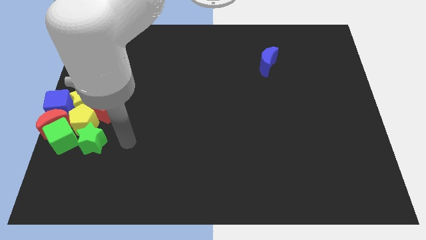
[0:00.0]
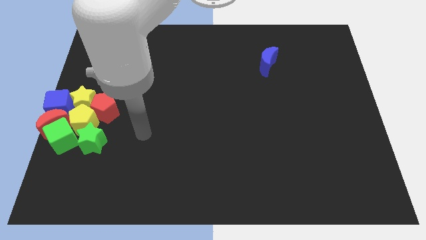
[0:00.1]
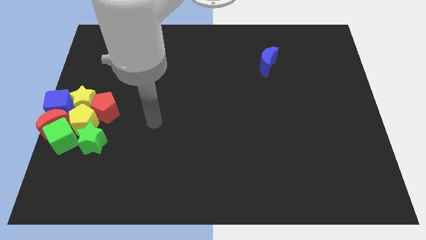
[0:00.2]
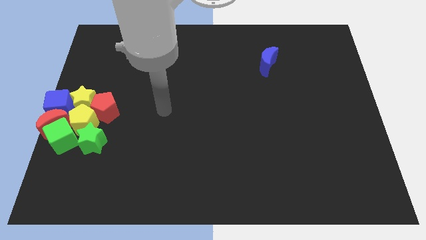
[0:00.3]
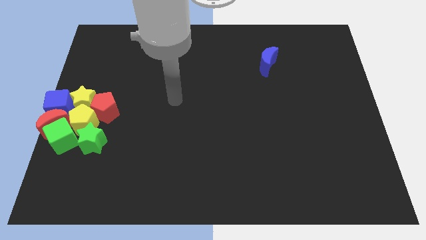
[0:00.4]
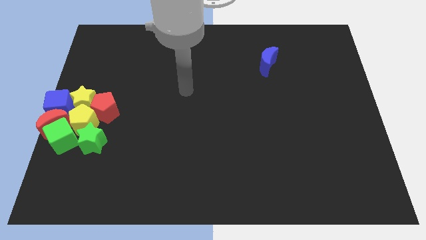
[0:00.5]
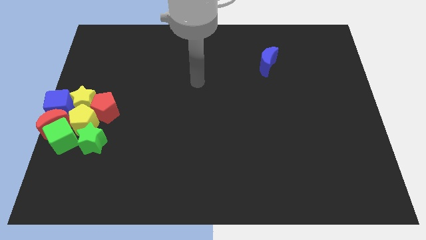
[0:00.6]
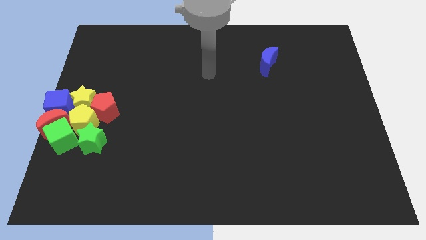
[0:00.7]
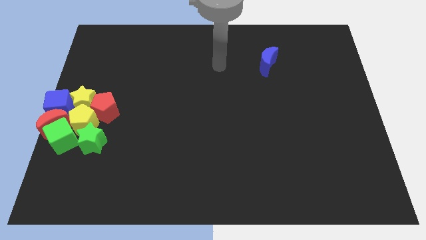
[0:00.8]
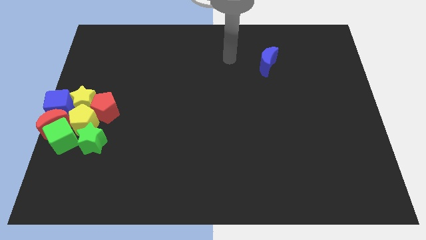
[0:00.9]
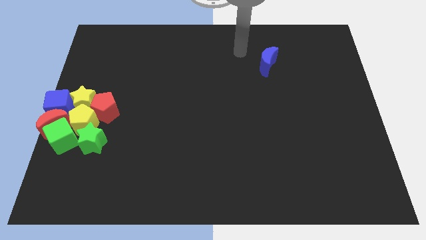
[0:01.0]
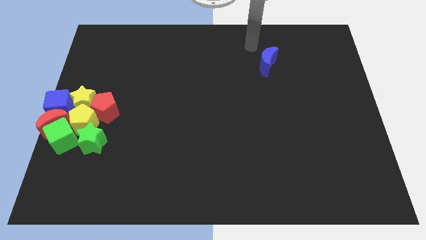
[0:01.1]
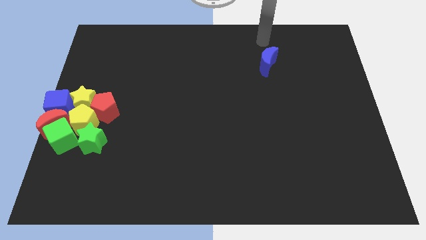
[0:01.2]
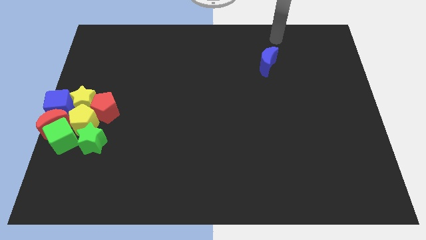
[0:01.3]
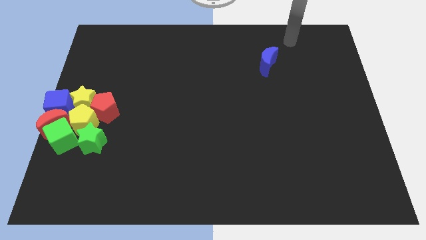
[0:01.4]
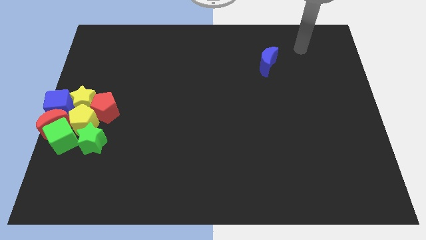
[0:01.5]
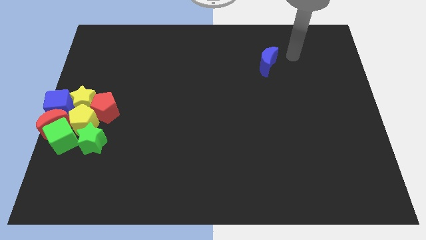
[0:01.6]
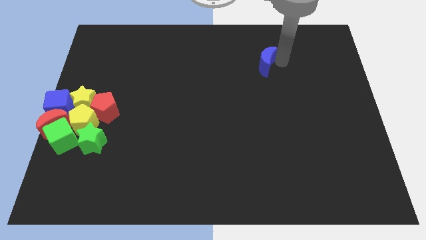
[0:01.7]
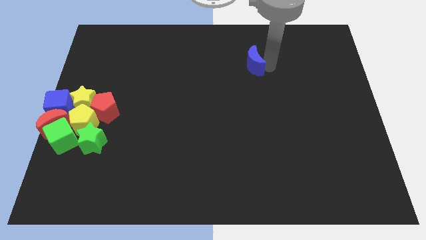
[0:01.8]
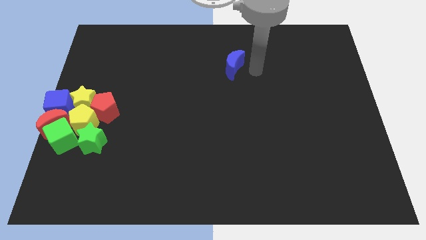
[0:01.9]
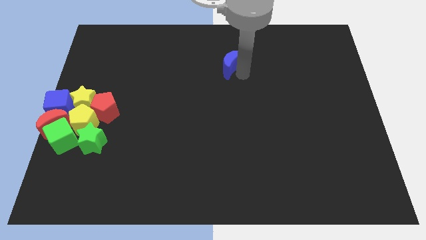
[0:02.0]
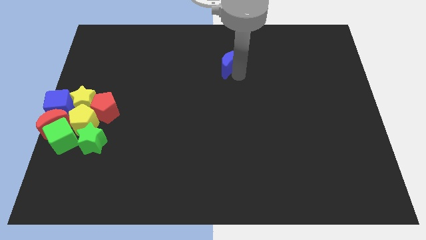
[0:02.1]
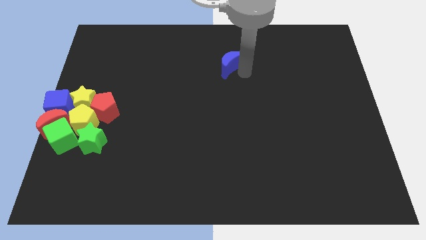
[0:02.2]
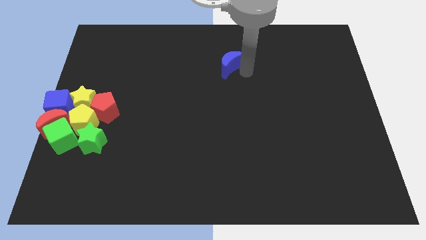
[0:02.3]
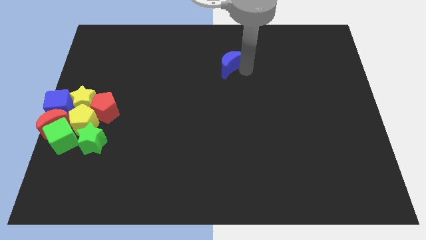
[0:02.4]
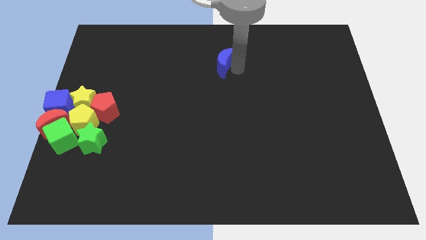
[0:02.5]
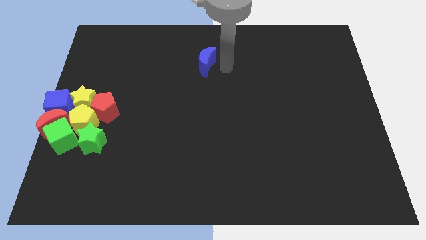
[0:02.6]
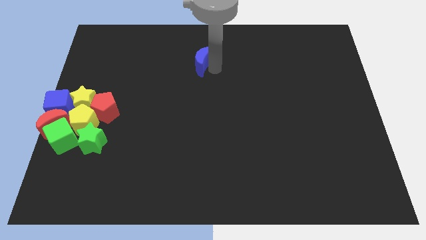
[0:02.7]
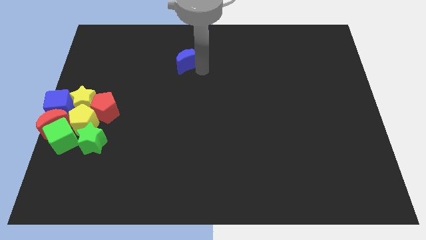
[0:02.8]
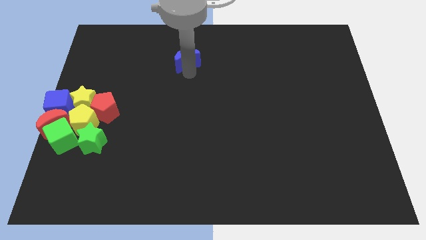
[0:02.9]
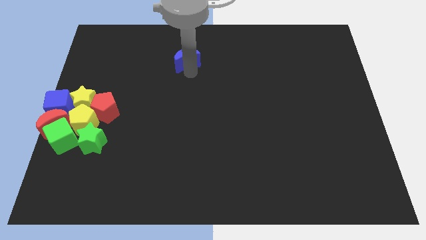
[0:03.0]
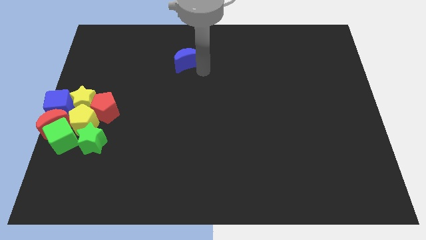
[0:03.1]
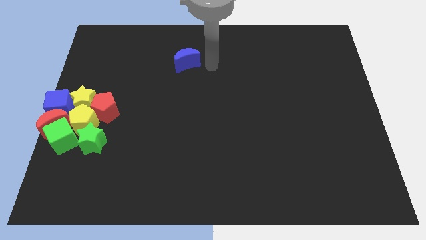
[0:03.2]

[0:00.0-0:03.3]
move the blue crescent towards the left of the board

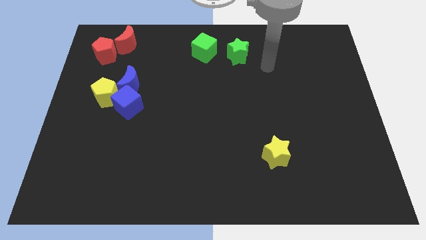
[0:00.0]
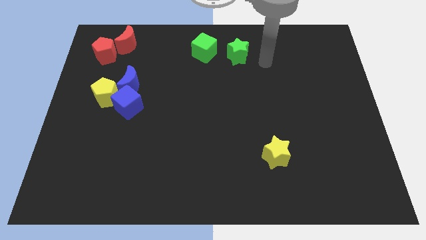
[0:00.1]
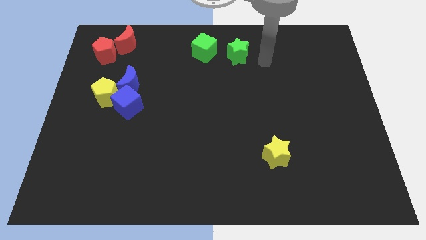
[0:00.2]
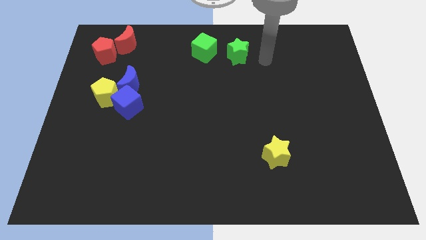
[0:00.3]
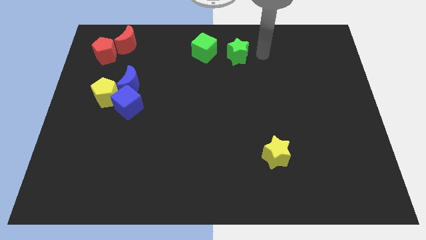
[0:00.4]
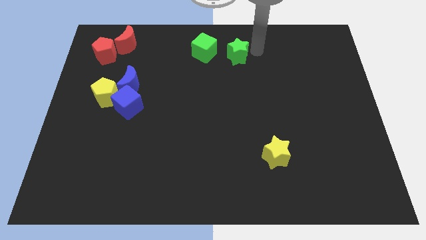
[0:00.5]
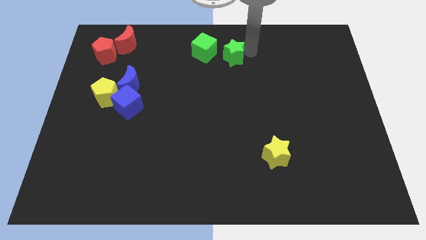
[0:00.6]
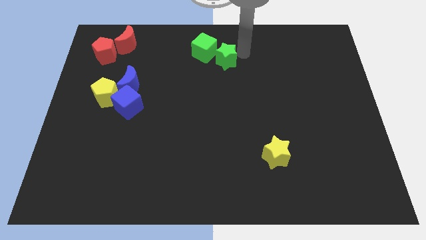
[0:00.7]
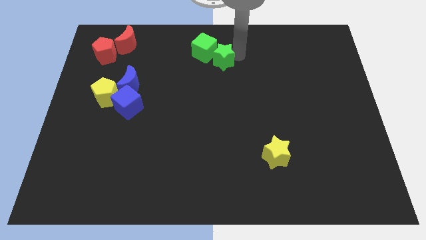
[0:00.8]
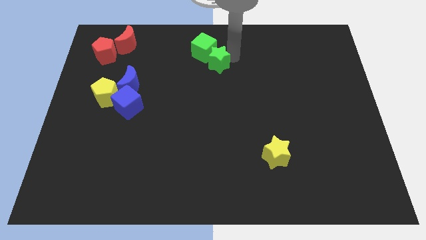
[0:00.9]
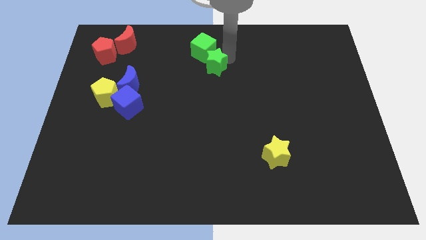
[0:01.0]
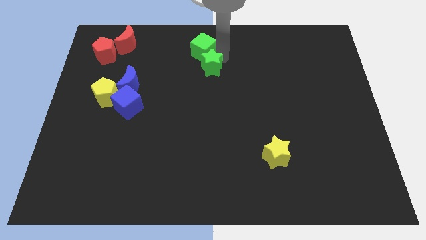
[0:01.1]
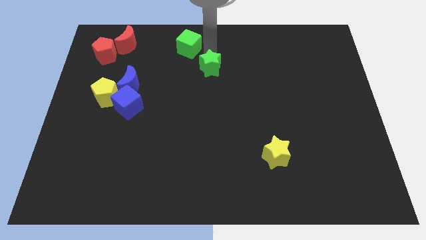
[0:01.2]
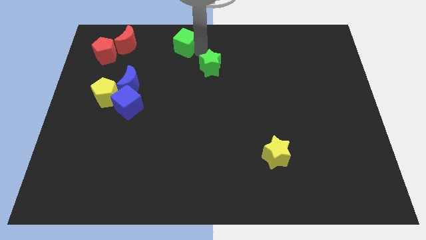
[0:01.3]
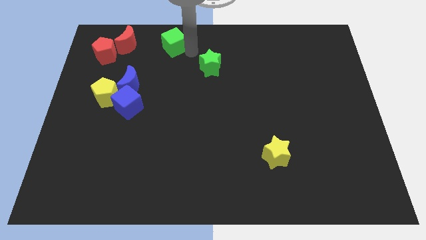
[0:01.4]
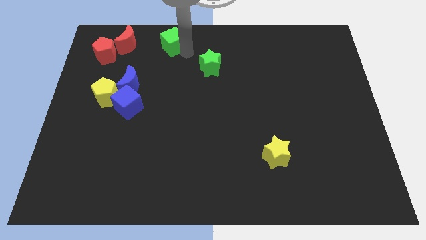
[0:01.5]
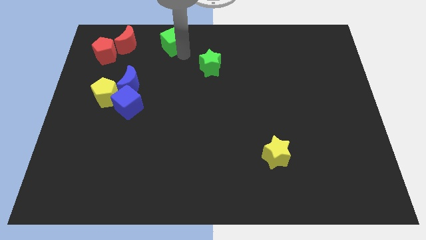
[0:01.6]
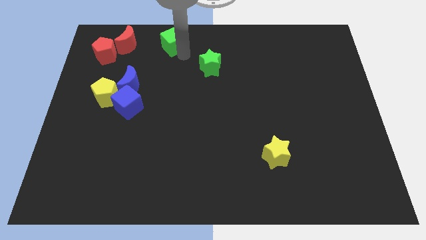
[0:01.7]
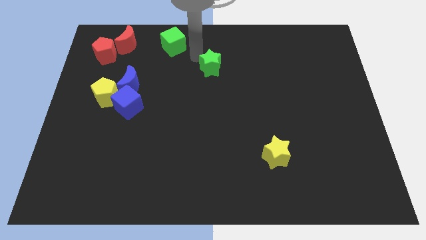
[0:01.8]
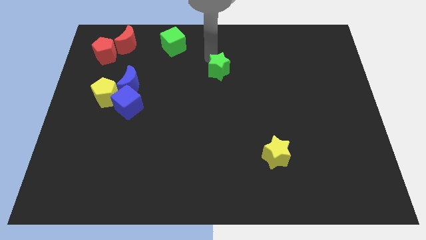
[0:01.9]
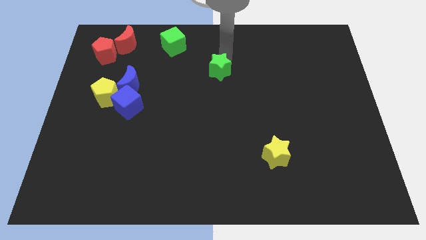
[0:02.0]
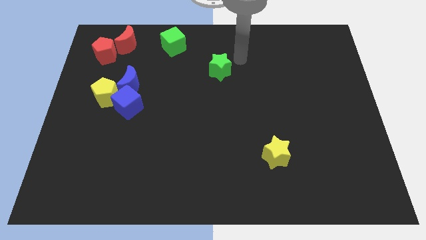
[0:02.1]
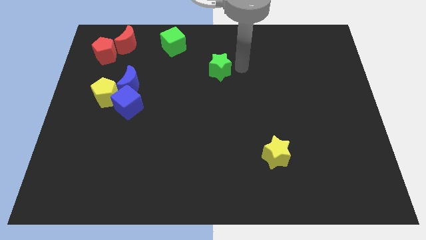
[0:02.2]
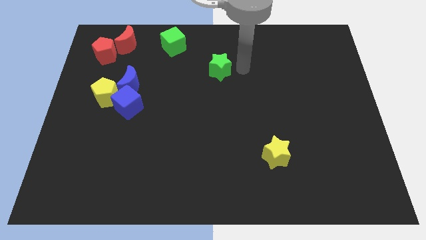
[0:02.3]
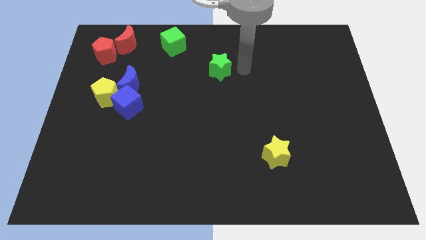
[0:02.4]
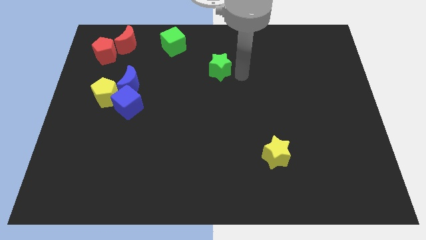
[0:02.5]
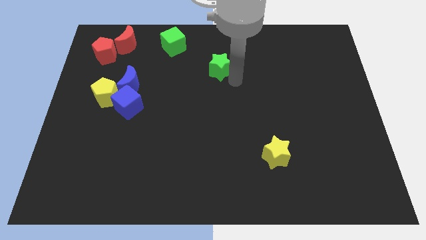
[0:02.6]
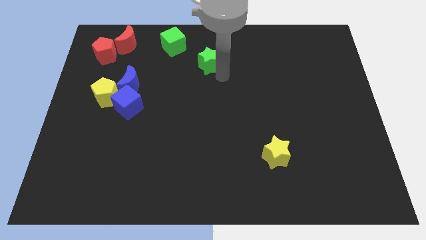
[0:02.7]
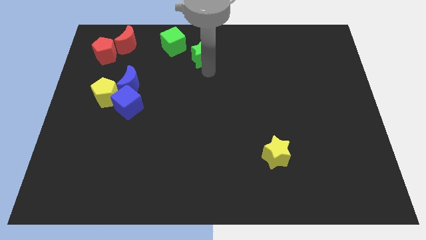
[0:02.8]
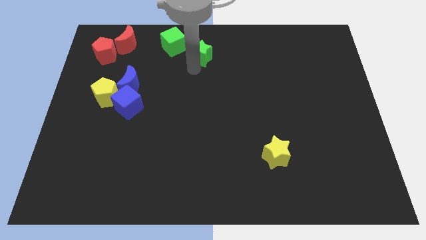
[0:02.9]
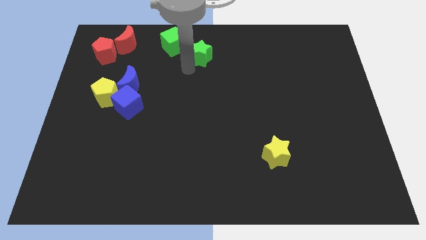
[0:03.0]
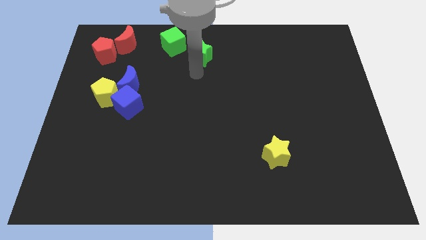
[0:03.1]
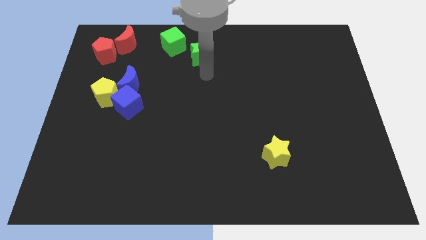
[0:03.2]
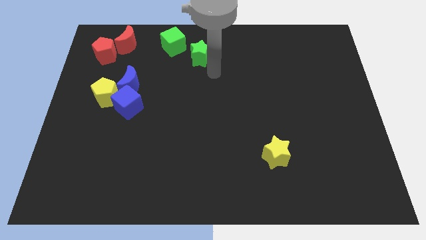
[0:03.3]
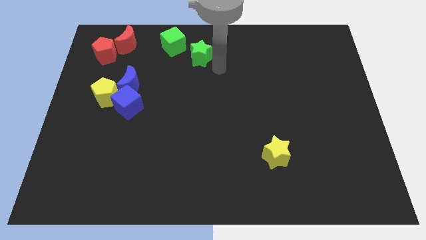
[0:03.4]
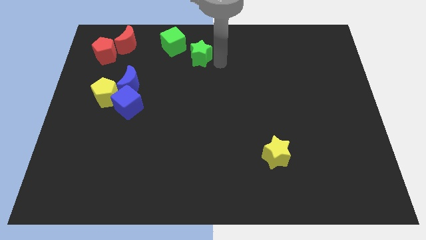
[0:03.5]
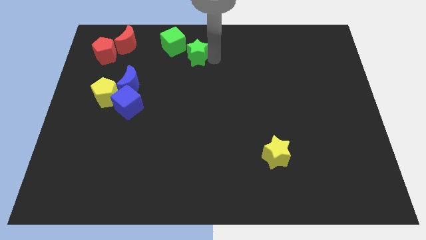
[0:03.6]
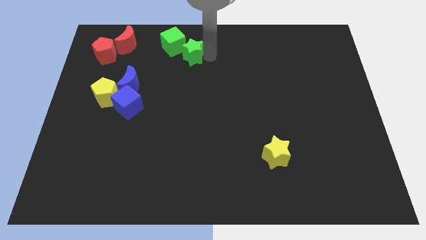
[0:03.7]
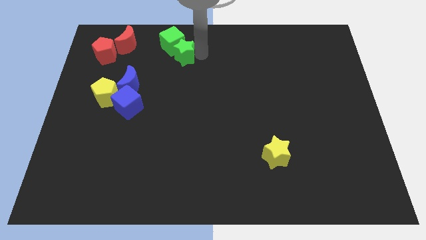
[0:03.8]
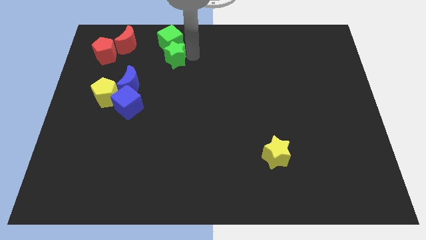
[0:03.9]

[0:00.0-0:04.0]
place the green star below the green cube

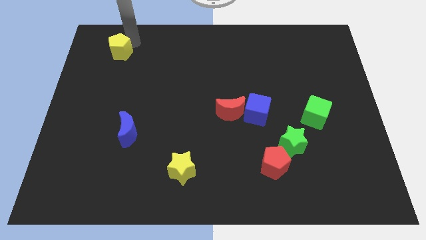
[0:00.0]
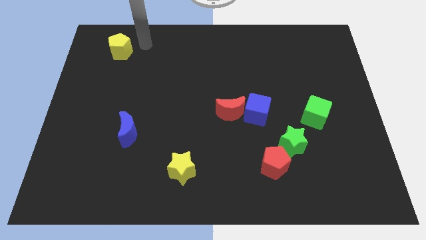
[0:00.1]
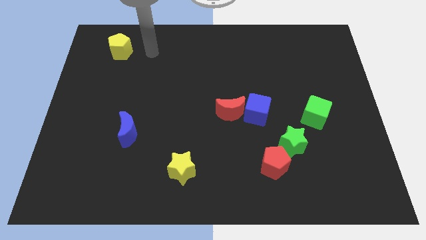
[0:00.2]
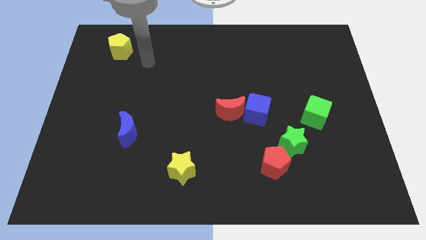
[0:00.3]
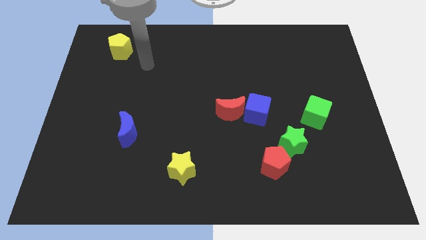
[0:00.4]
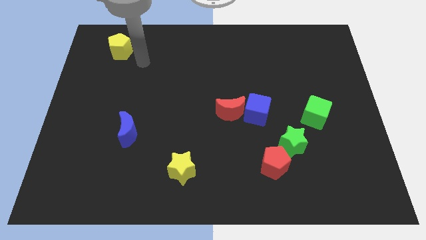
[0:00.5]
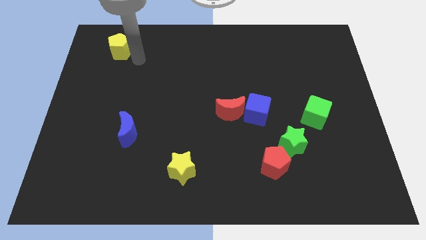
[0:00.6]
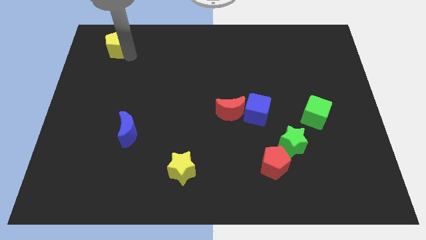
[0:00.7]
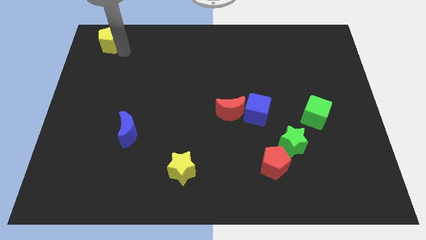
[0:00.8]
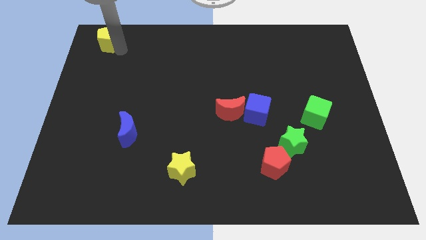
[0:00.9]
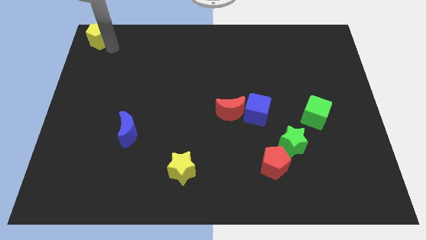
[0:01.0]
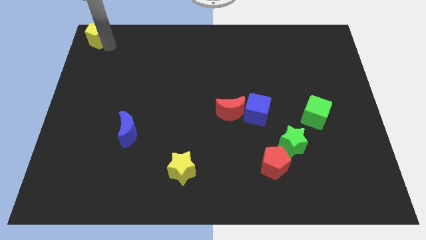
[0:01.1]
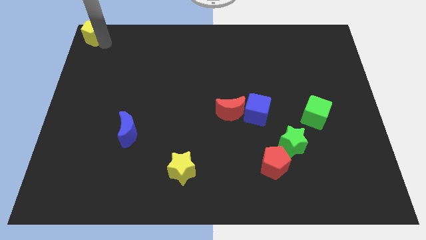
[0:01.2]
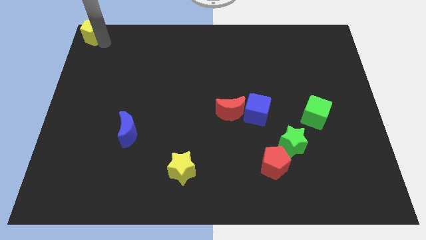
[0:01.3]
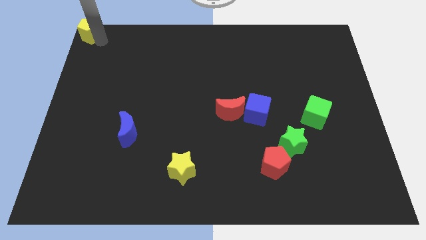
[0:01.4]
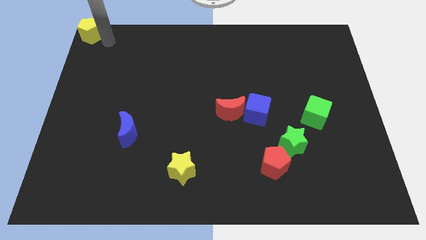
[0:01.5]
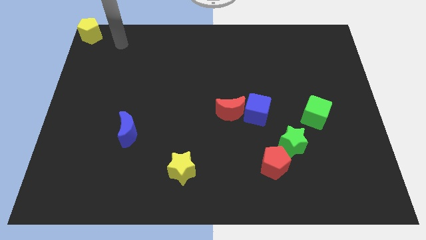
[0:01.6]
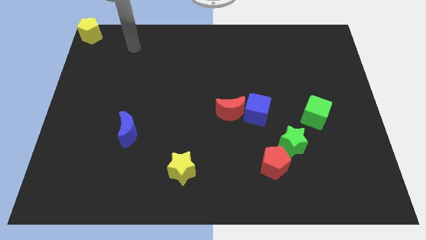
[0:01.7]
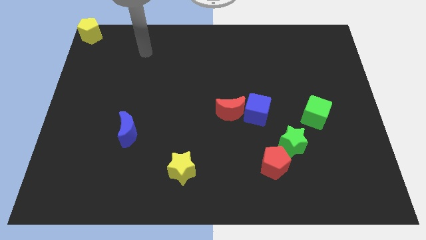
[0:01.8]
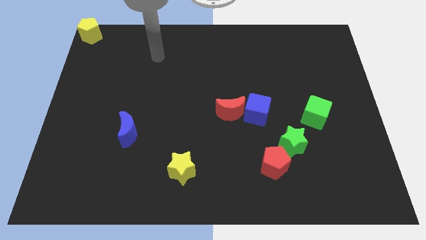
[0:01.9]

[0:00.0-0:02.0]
place the yellow pentagon on the top left corner of the board
